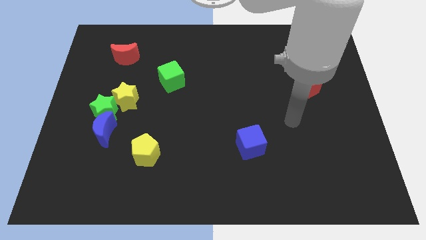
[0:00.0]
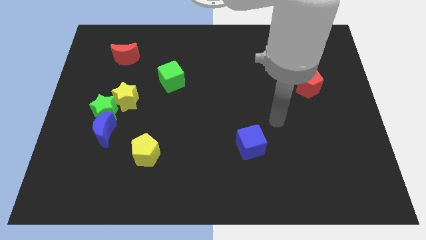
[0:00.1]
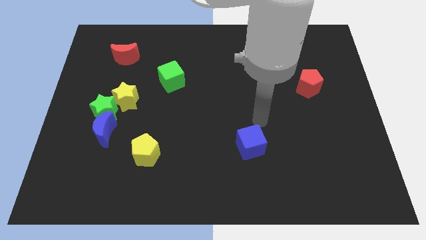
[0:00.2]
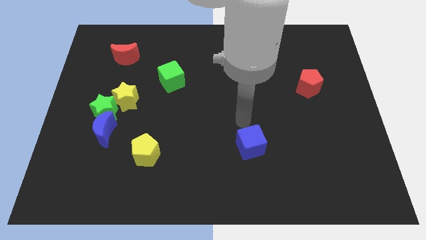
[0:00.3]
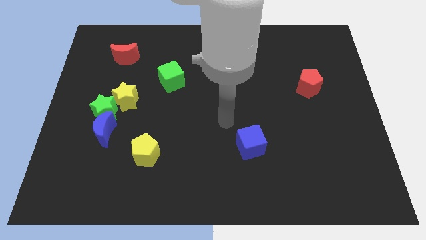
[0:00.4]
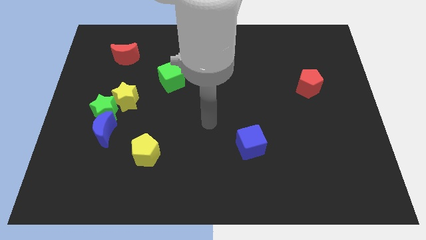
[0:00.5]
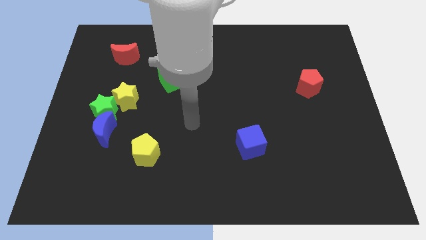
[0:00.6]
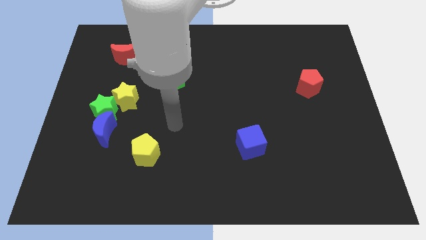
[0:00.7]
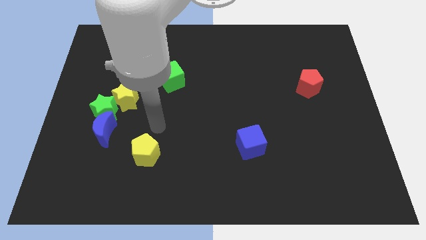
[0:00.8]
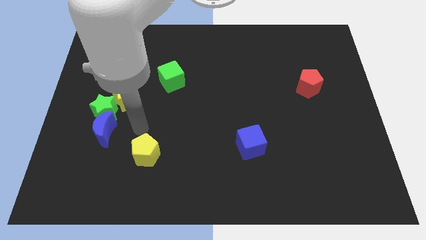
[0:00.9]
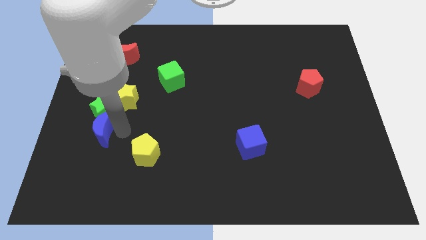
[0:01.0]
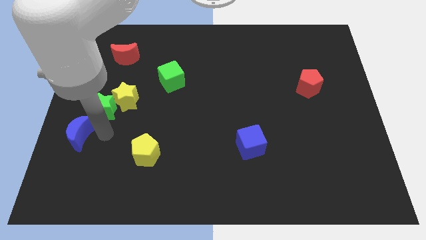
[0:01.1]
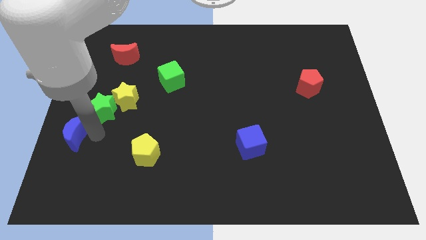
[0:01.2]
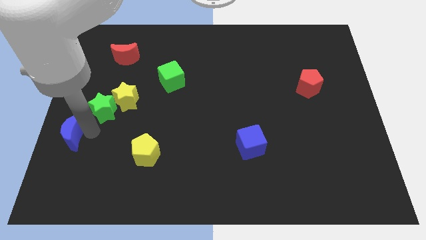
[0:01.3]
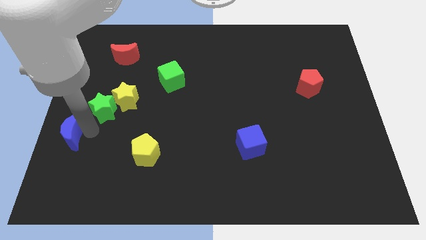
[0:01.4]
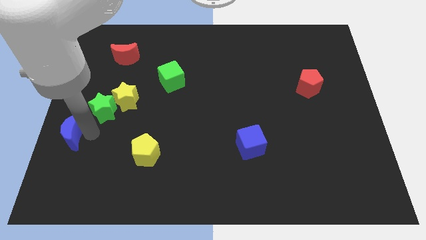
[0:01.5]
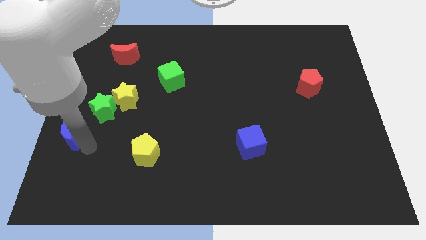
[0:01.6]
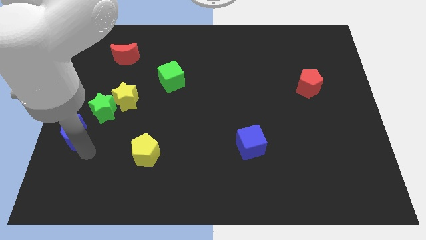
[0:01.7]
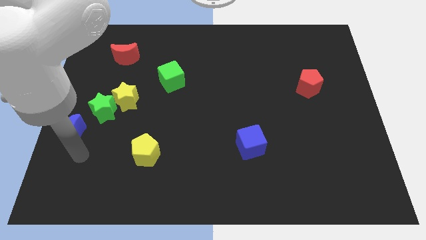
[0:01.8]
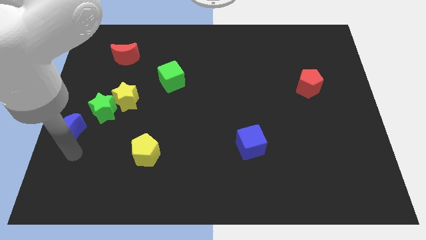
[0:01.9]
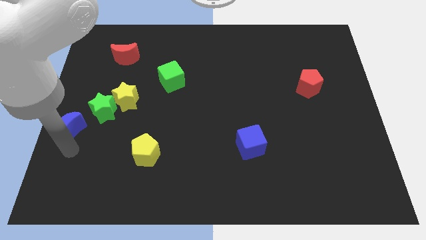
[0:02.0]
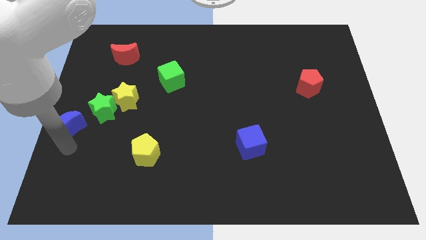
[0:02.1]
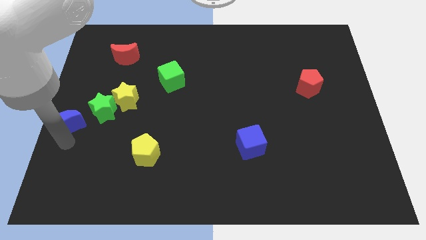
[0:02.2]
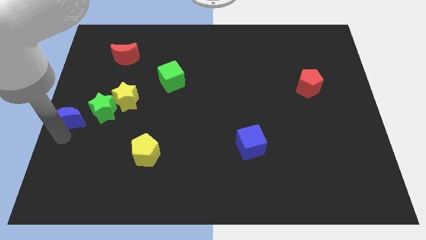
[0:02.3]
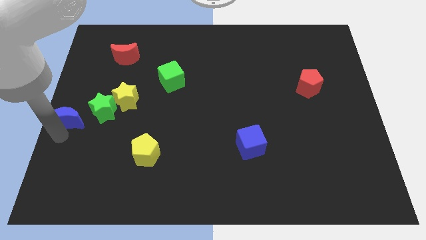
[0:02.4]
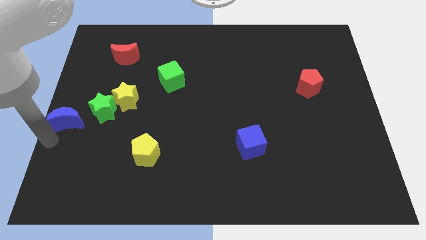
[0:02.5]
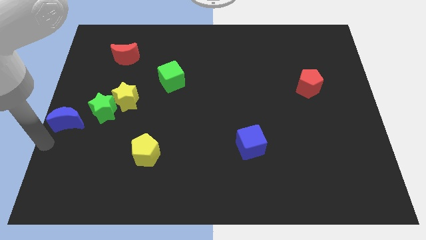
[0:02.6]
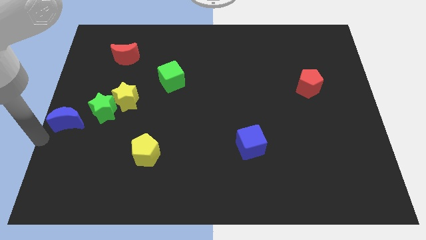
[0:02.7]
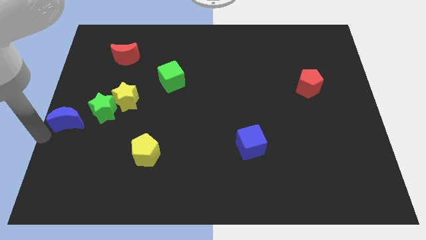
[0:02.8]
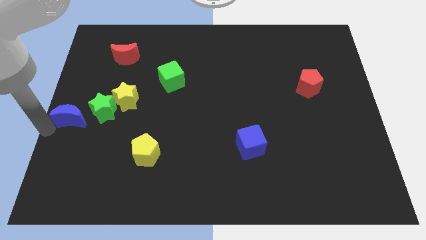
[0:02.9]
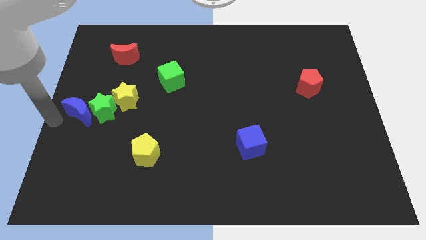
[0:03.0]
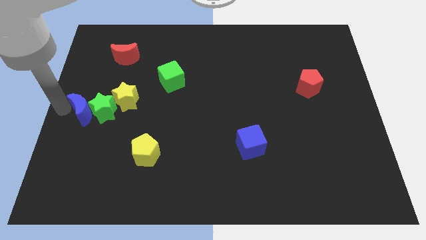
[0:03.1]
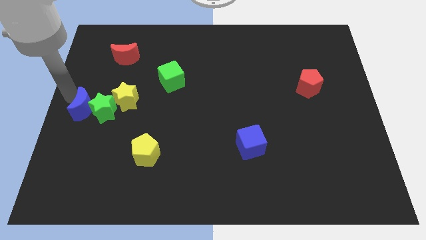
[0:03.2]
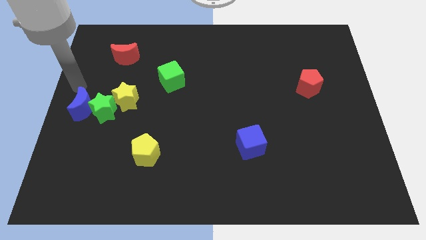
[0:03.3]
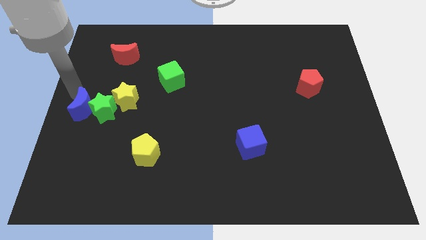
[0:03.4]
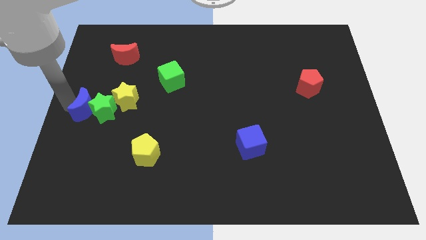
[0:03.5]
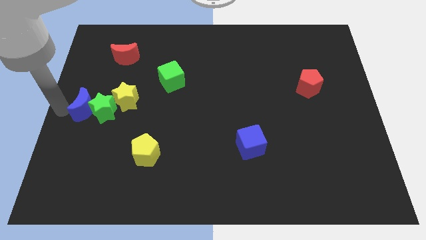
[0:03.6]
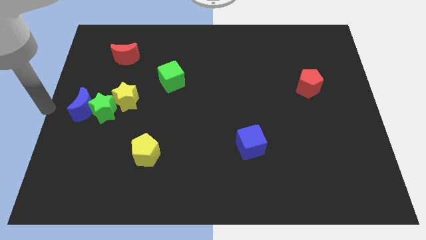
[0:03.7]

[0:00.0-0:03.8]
push the blue moon left to the green star

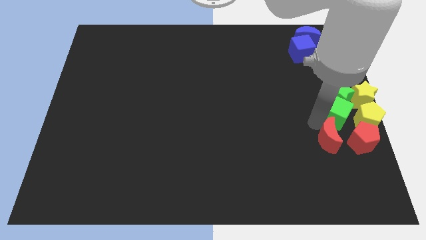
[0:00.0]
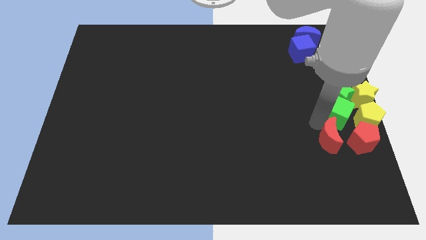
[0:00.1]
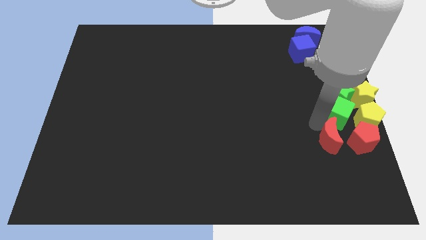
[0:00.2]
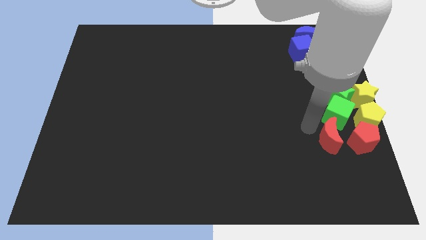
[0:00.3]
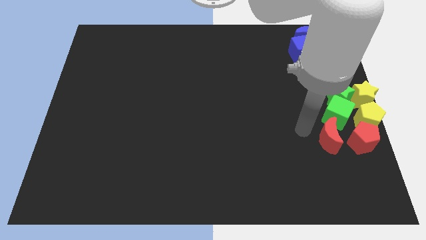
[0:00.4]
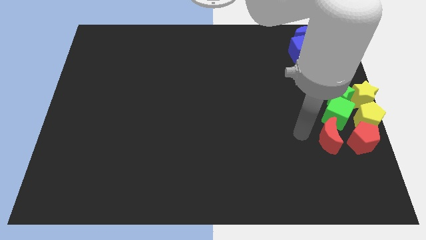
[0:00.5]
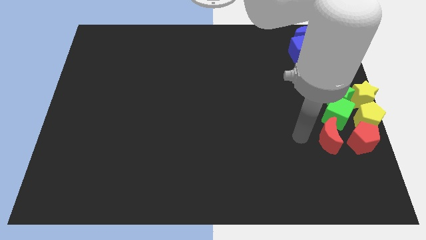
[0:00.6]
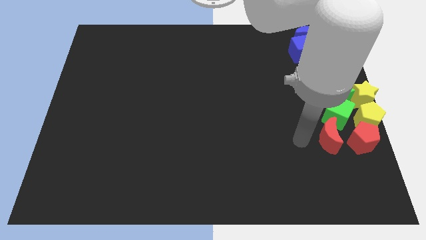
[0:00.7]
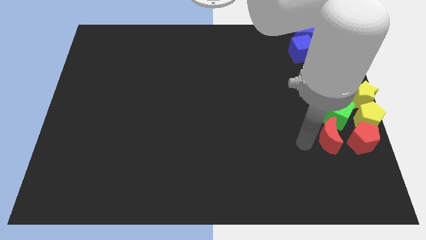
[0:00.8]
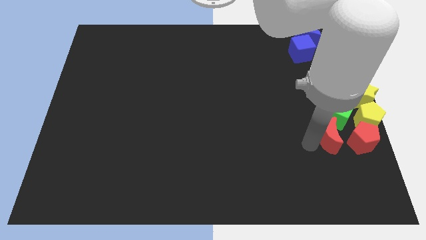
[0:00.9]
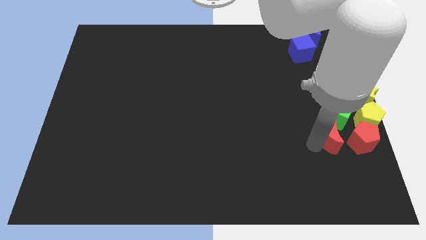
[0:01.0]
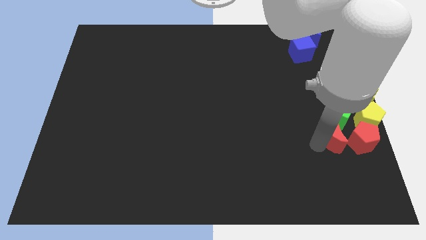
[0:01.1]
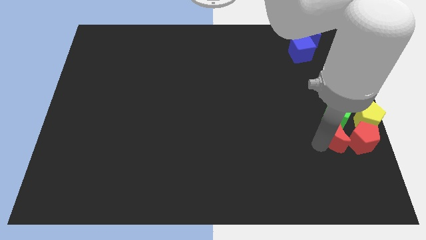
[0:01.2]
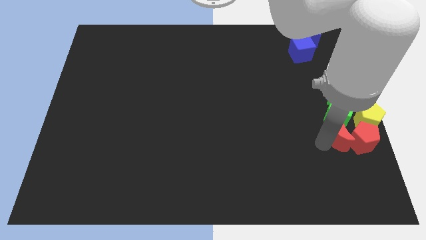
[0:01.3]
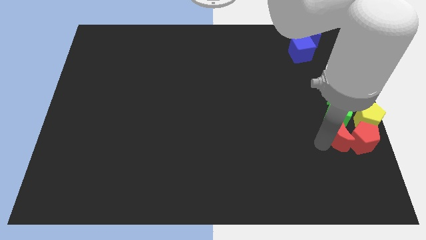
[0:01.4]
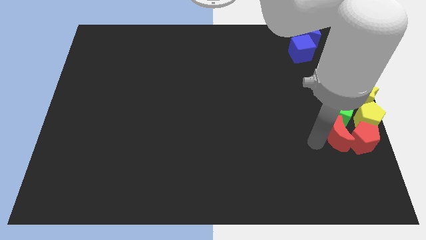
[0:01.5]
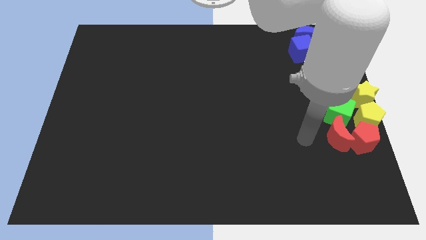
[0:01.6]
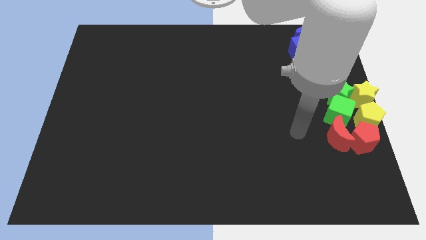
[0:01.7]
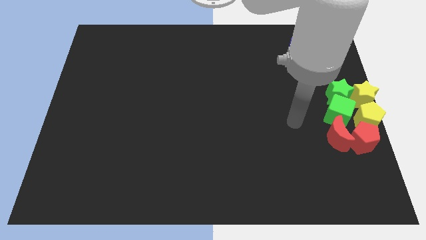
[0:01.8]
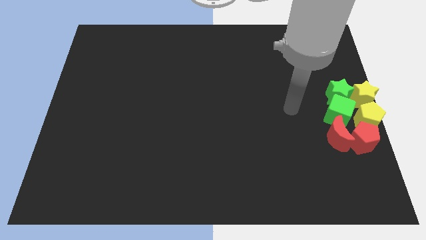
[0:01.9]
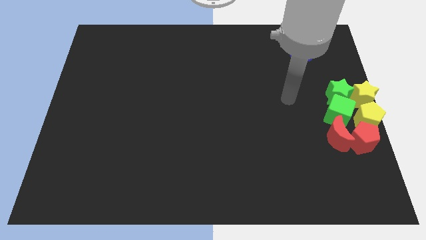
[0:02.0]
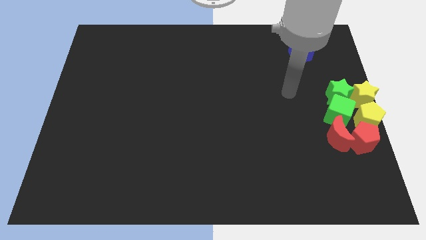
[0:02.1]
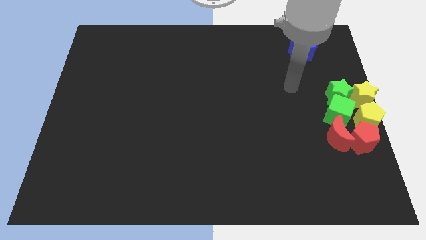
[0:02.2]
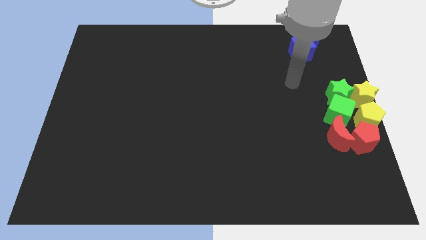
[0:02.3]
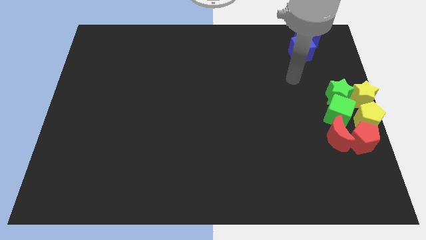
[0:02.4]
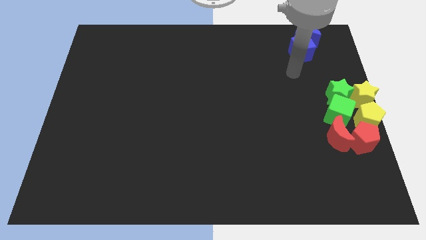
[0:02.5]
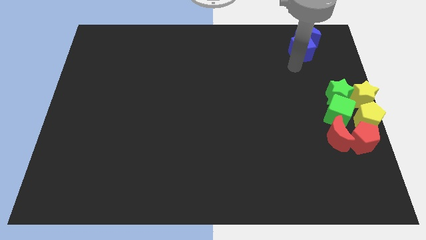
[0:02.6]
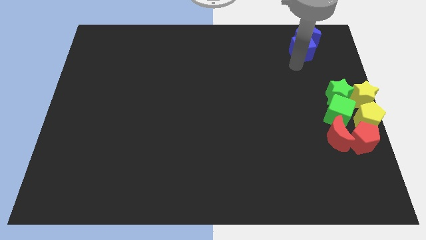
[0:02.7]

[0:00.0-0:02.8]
place the green blocks yellow blocks and red blocks parallel to each other

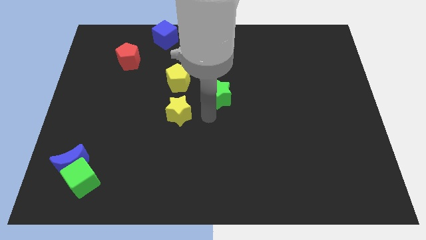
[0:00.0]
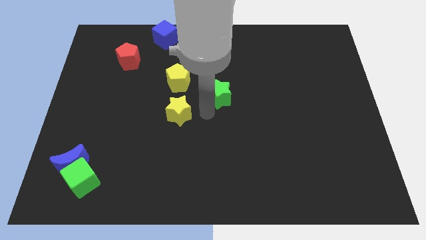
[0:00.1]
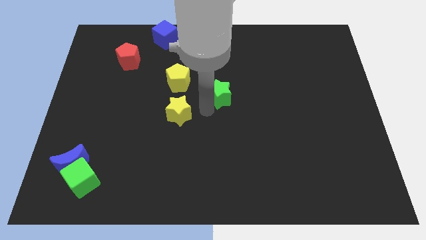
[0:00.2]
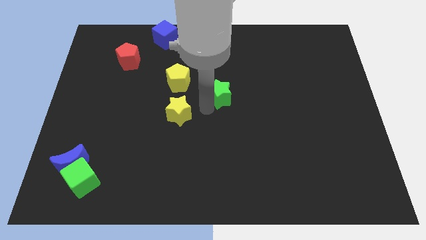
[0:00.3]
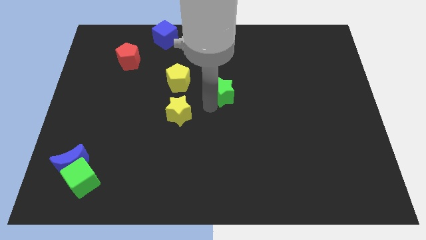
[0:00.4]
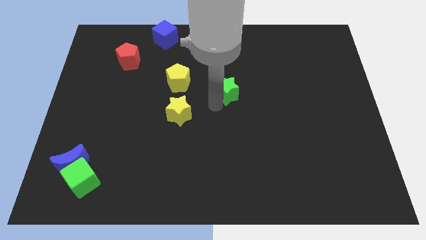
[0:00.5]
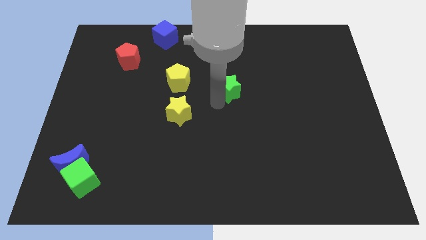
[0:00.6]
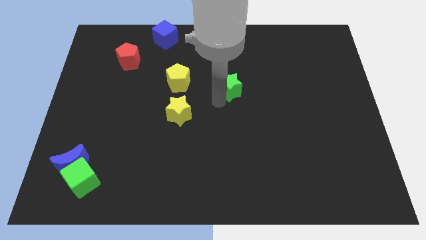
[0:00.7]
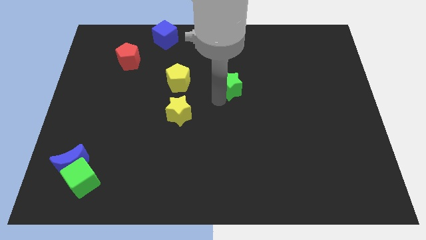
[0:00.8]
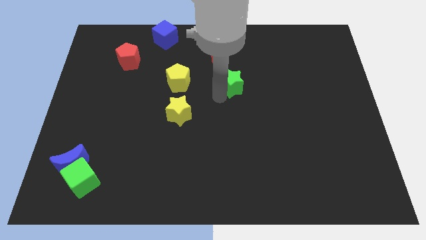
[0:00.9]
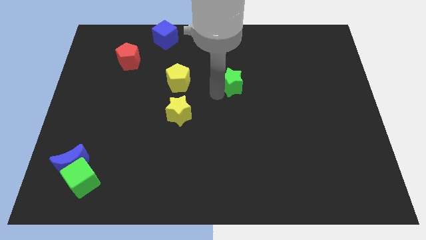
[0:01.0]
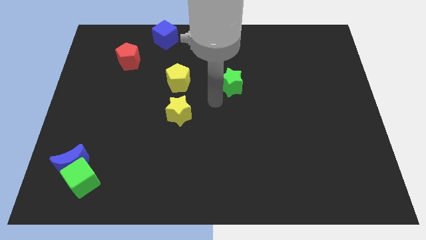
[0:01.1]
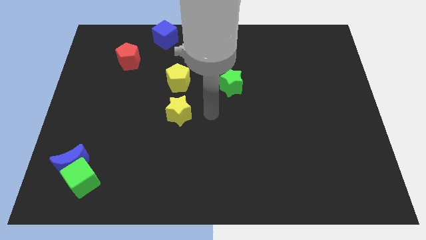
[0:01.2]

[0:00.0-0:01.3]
push the green star upwards slightly

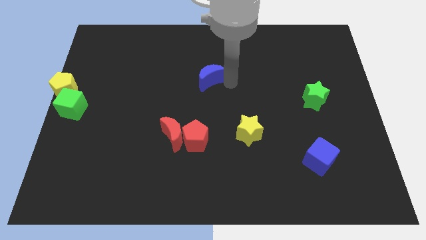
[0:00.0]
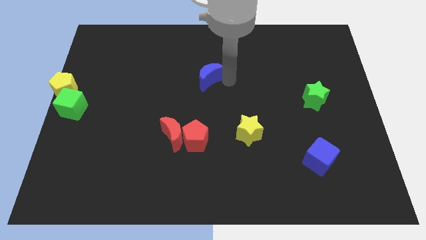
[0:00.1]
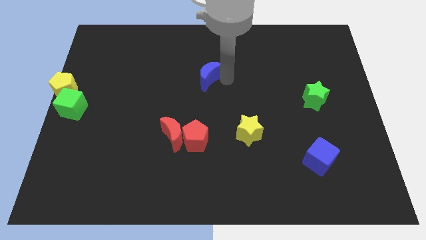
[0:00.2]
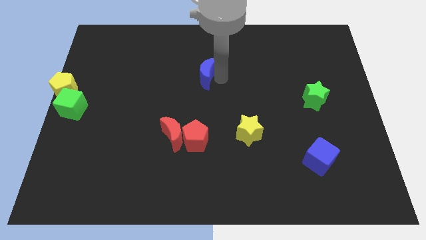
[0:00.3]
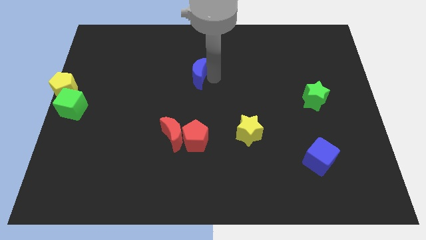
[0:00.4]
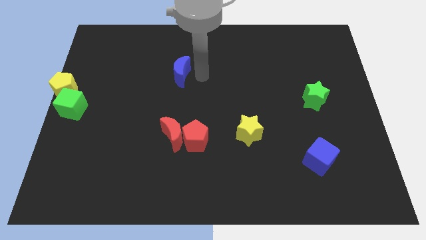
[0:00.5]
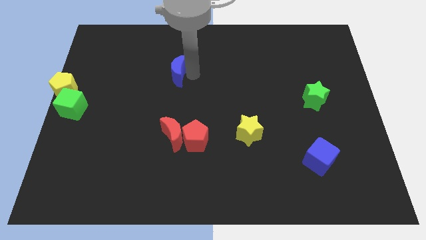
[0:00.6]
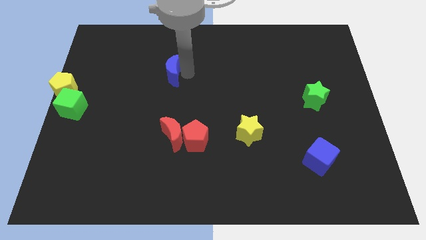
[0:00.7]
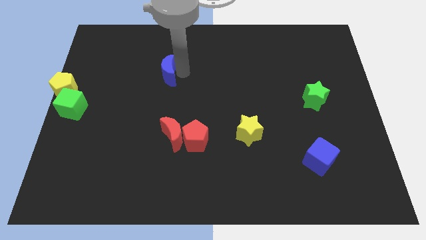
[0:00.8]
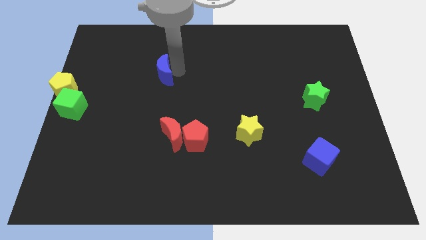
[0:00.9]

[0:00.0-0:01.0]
move the blue crescent to the top of the red crescent
